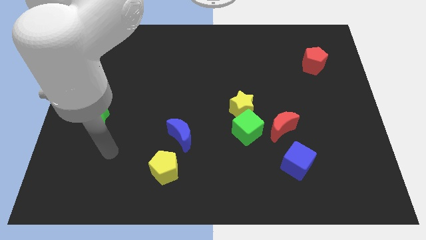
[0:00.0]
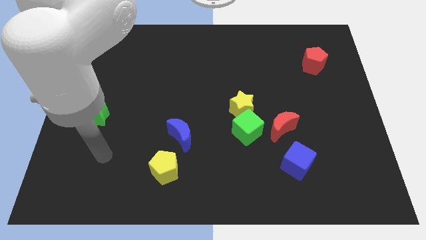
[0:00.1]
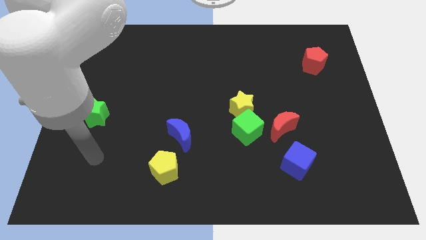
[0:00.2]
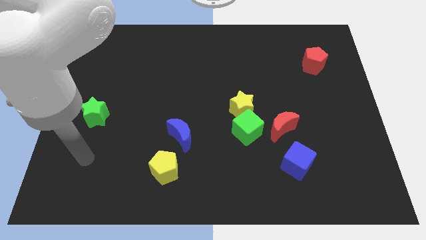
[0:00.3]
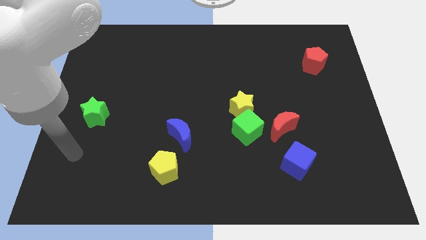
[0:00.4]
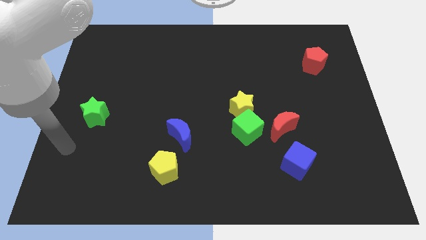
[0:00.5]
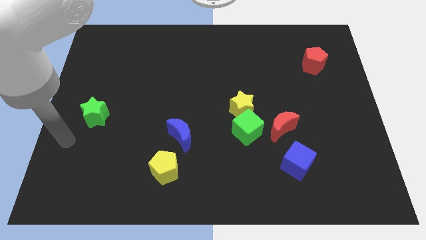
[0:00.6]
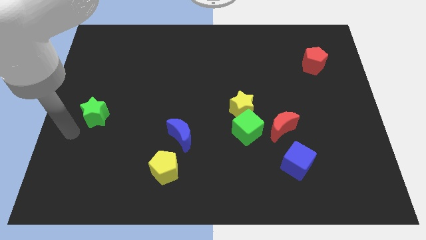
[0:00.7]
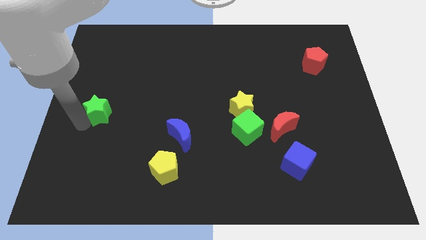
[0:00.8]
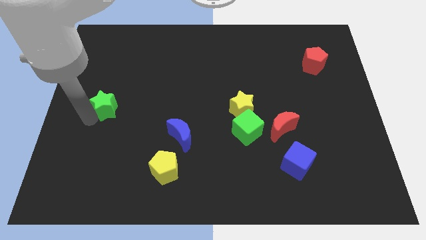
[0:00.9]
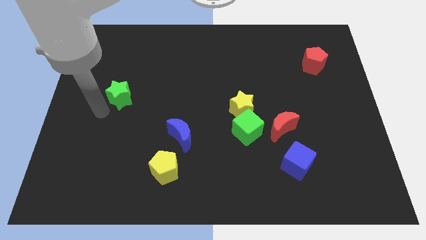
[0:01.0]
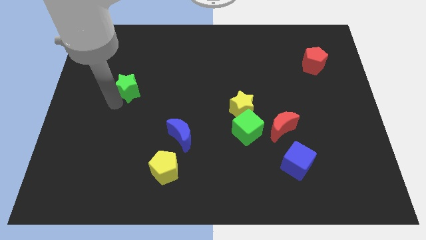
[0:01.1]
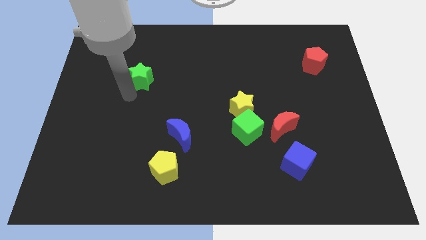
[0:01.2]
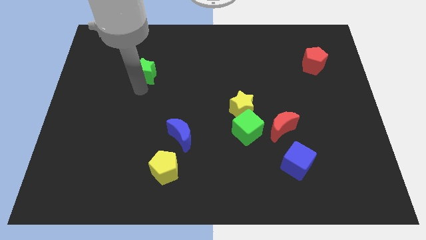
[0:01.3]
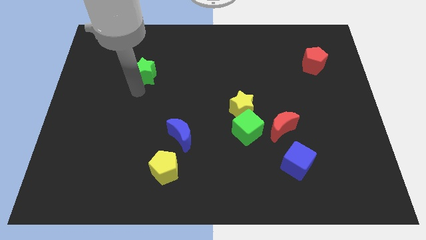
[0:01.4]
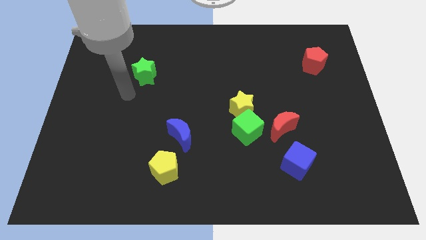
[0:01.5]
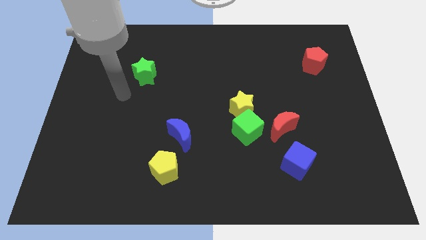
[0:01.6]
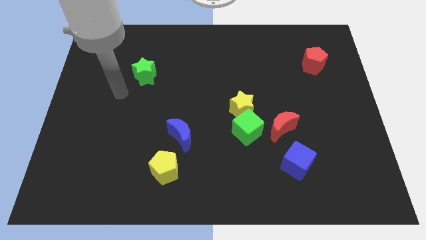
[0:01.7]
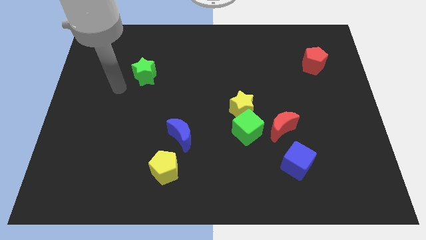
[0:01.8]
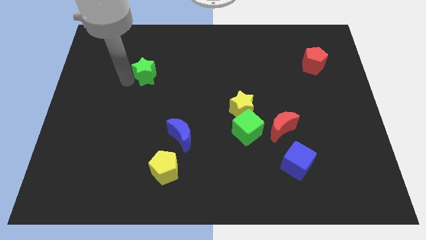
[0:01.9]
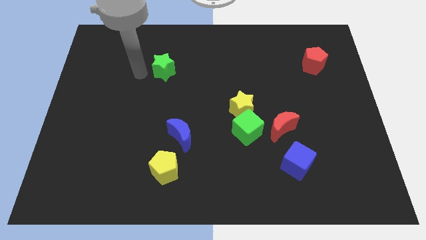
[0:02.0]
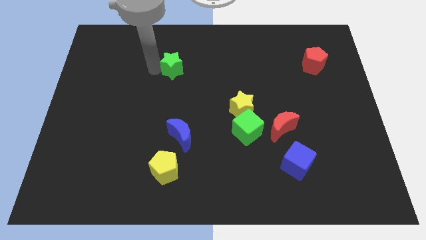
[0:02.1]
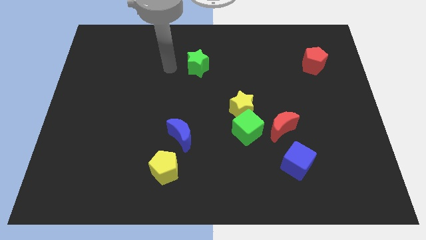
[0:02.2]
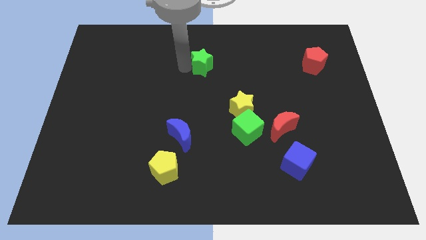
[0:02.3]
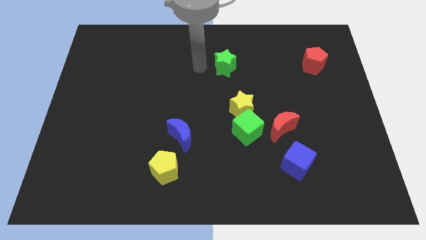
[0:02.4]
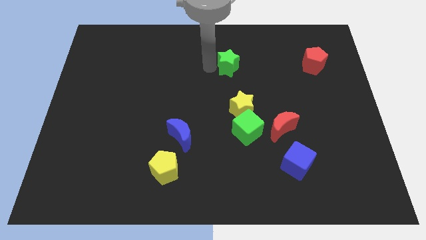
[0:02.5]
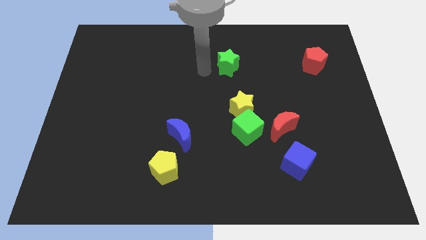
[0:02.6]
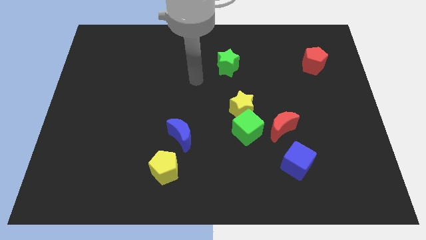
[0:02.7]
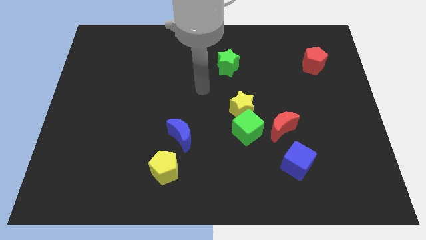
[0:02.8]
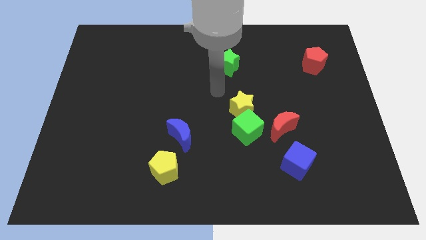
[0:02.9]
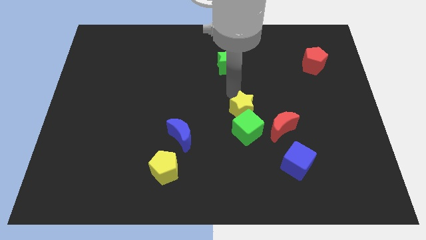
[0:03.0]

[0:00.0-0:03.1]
place green star to the top left of yellow star

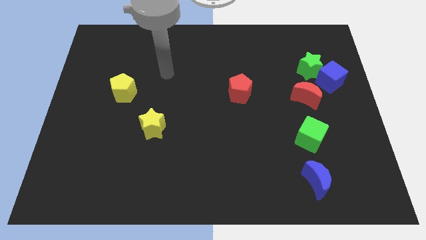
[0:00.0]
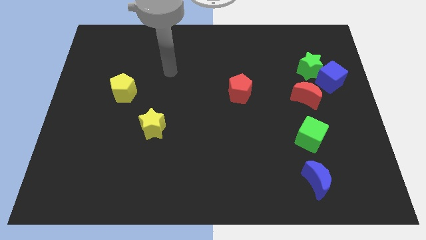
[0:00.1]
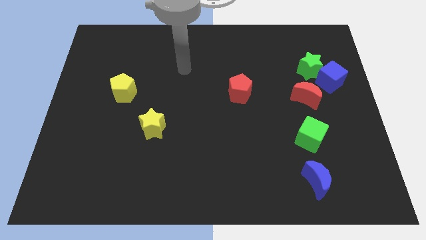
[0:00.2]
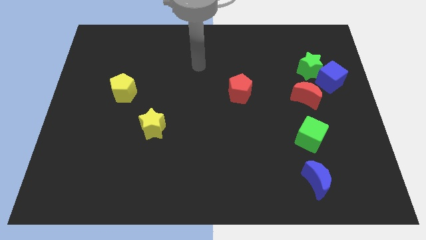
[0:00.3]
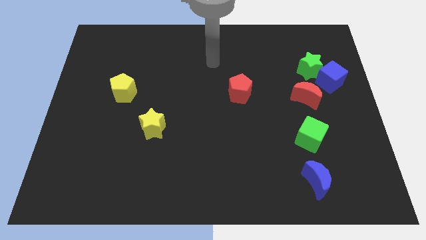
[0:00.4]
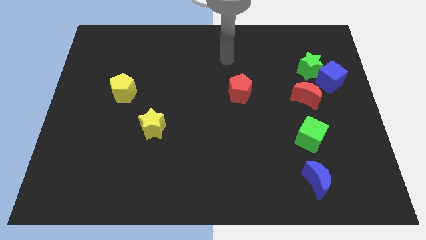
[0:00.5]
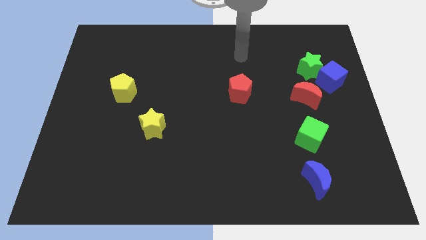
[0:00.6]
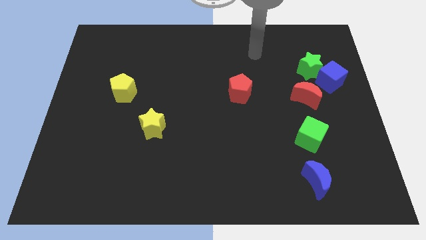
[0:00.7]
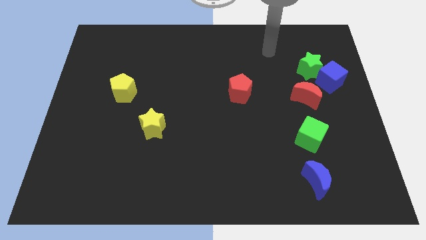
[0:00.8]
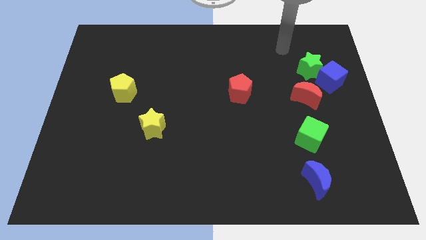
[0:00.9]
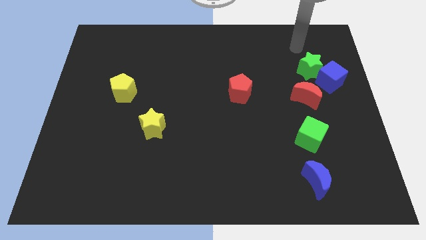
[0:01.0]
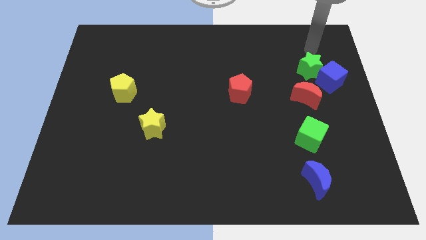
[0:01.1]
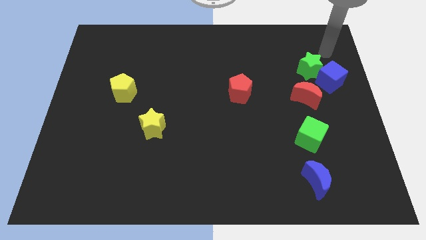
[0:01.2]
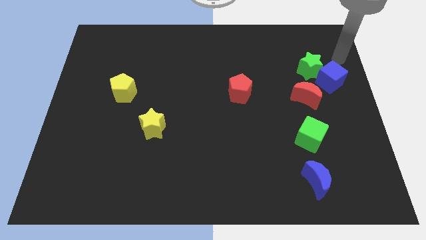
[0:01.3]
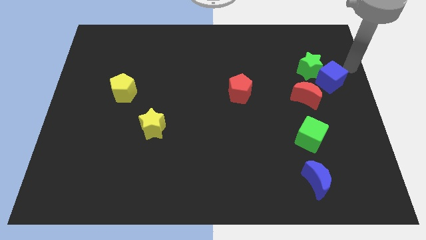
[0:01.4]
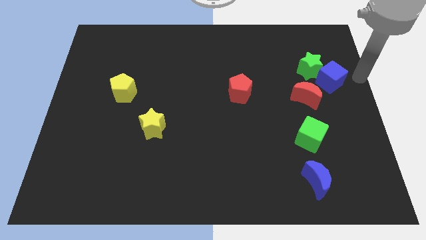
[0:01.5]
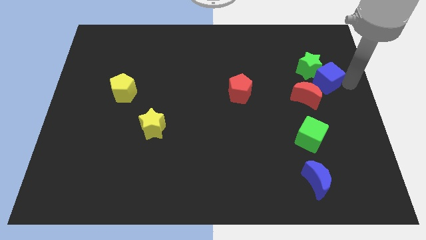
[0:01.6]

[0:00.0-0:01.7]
move the arm to the right of the blue cube

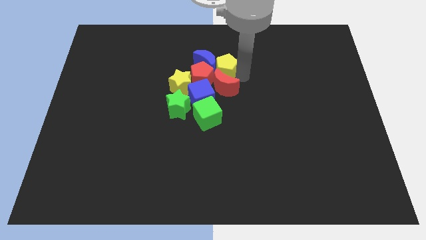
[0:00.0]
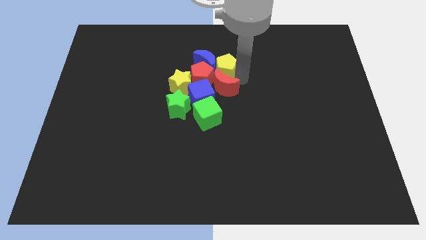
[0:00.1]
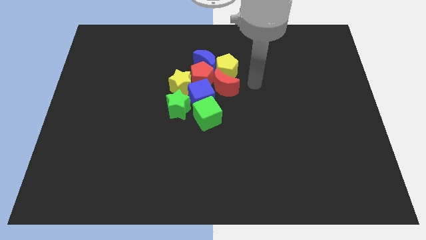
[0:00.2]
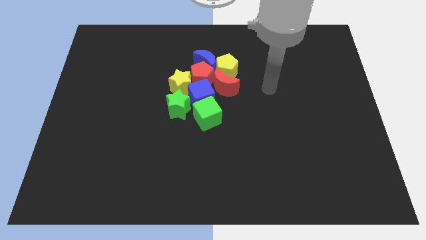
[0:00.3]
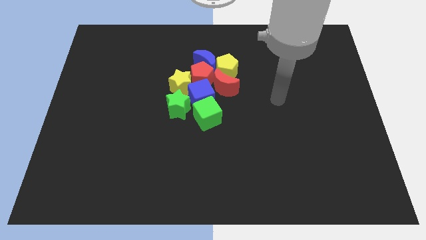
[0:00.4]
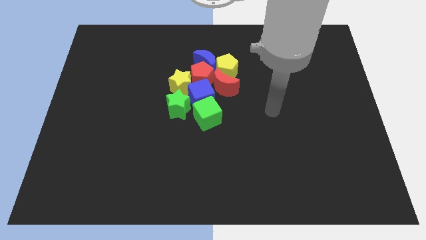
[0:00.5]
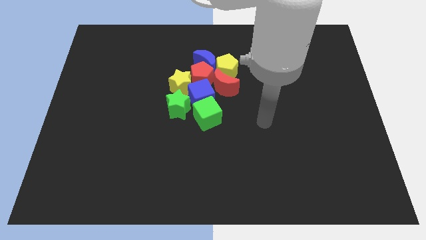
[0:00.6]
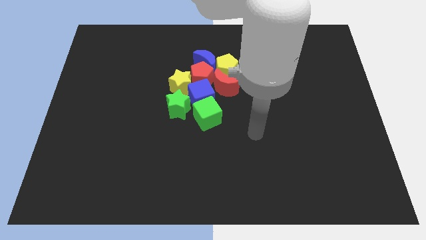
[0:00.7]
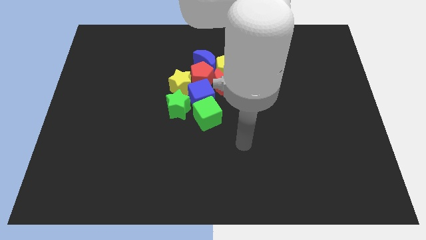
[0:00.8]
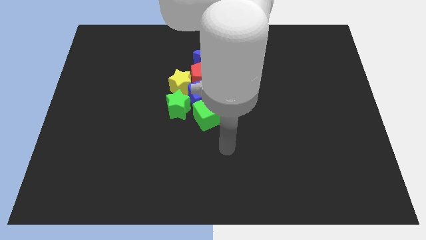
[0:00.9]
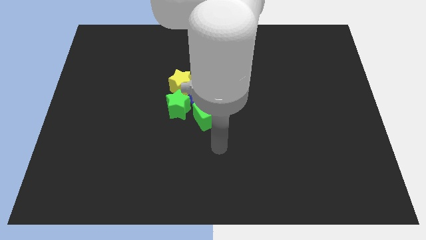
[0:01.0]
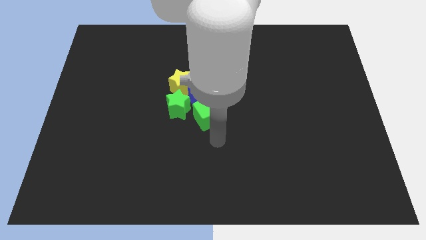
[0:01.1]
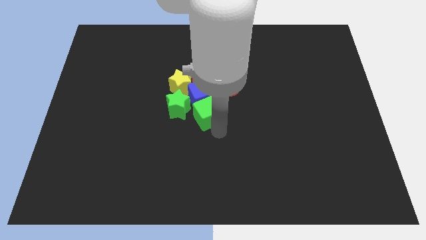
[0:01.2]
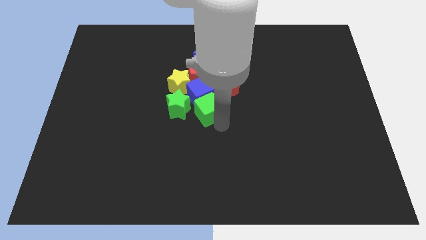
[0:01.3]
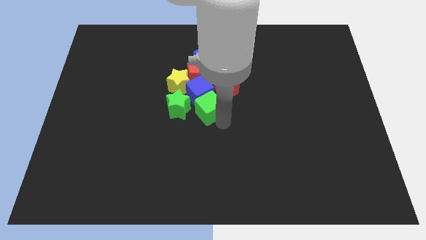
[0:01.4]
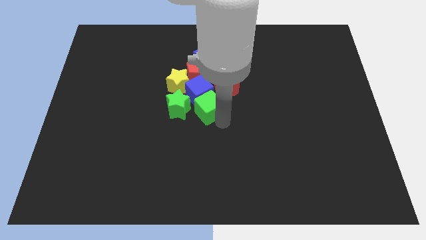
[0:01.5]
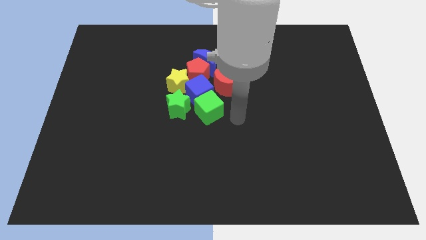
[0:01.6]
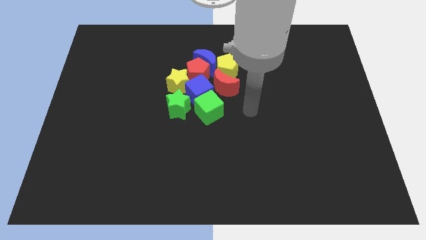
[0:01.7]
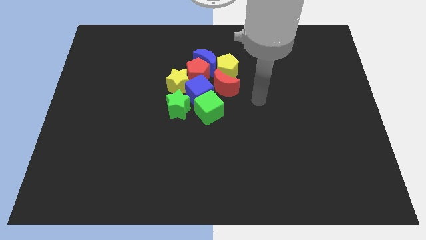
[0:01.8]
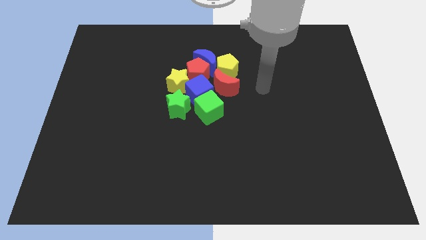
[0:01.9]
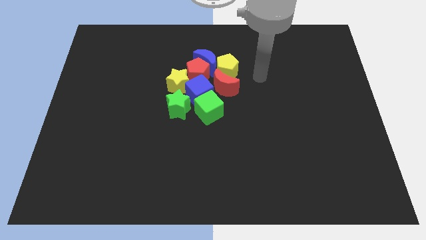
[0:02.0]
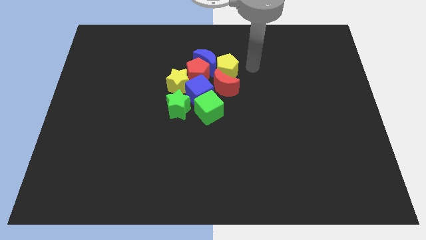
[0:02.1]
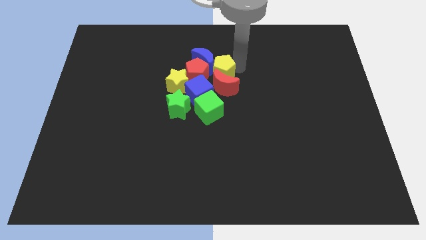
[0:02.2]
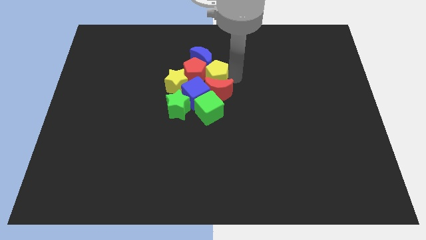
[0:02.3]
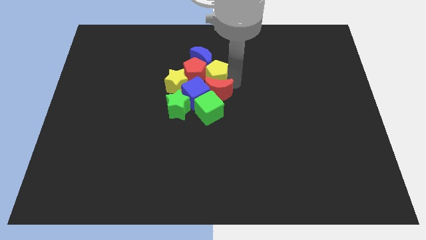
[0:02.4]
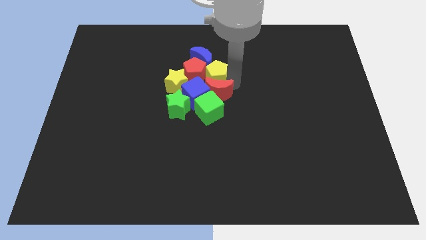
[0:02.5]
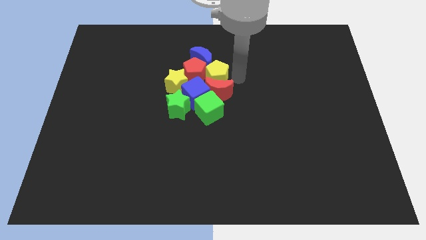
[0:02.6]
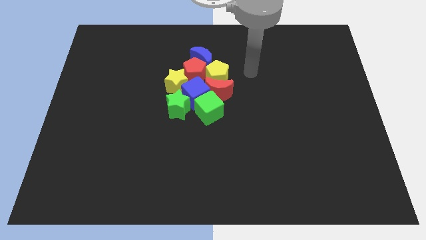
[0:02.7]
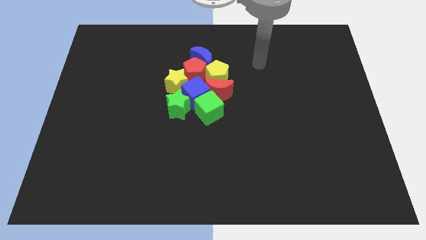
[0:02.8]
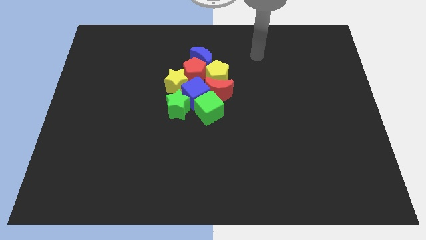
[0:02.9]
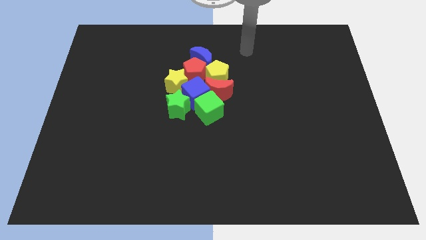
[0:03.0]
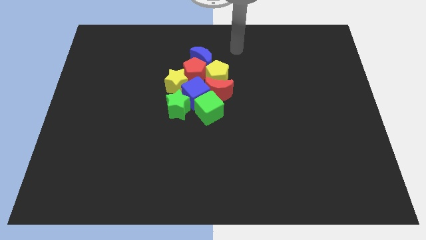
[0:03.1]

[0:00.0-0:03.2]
push green cube and yellow pentagon towards blue cube

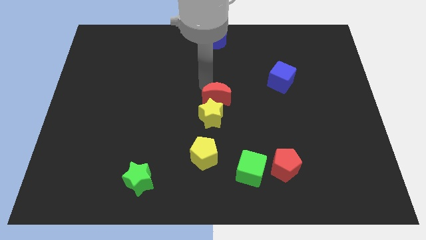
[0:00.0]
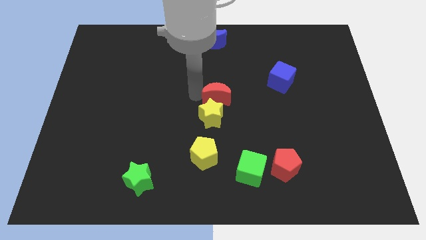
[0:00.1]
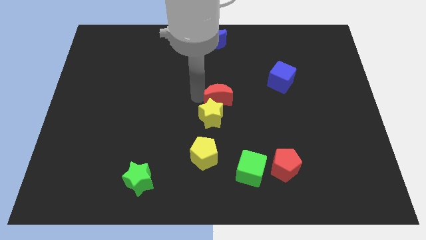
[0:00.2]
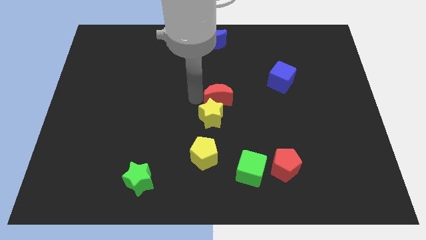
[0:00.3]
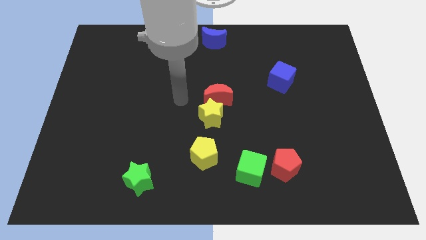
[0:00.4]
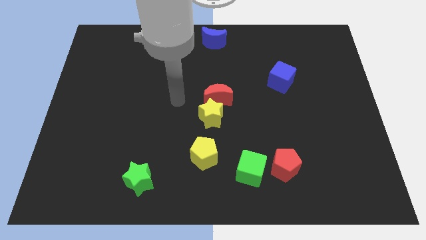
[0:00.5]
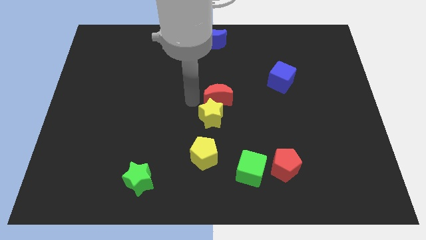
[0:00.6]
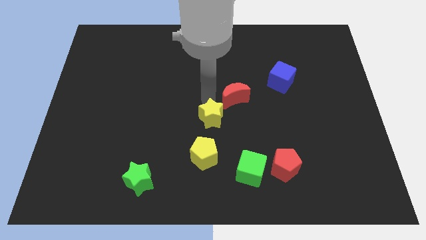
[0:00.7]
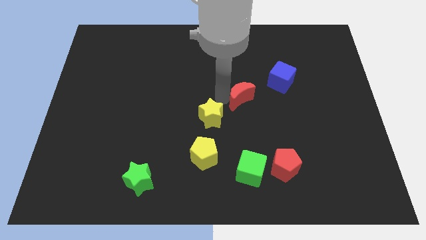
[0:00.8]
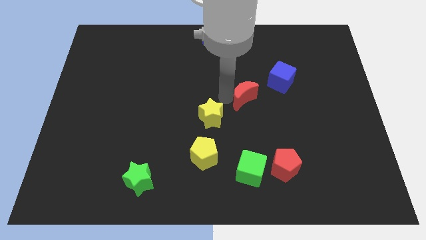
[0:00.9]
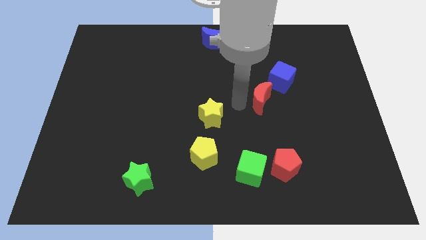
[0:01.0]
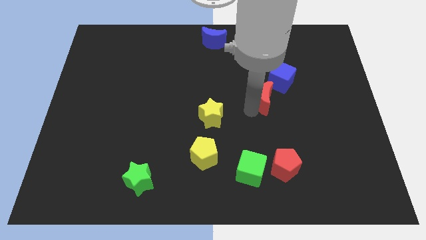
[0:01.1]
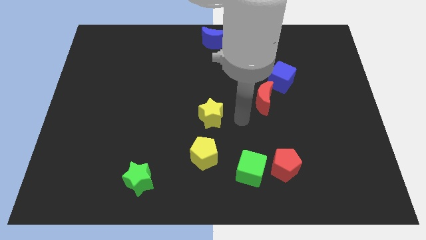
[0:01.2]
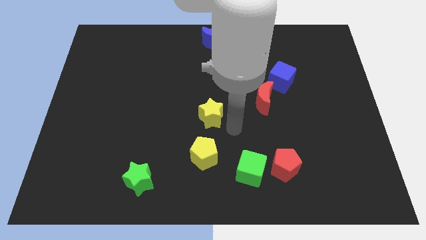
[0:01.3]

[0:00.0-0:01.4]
place red moon below the blue cube
